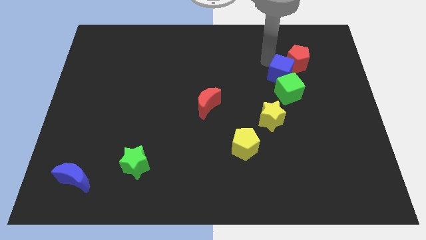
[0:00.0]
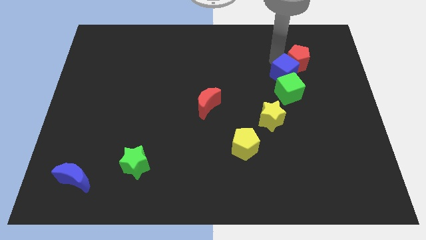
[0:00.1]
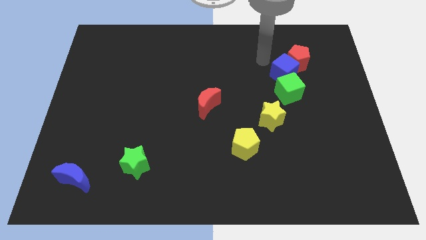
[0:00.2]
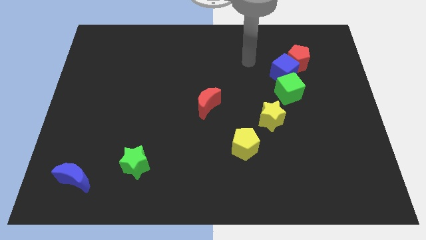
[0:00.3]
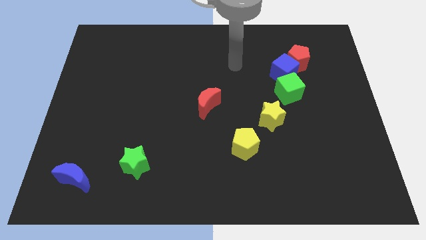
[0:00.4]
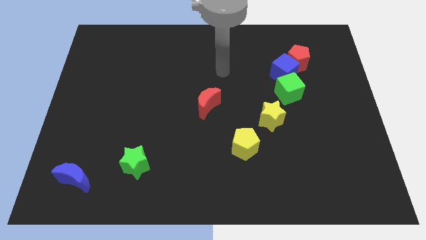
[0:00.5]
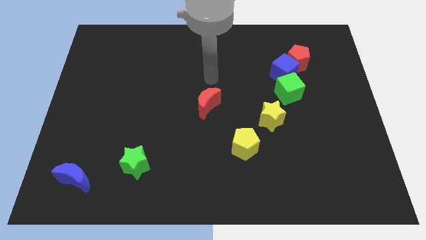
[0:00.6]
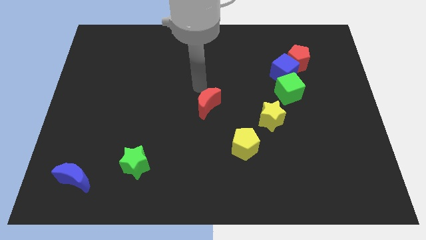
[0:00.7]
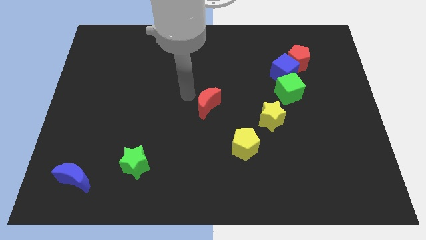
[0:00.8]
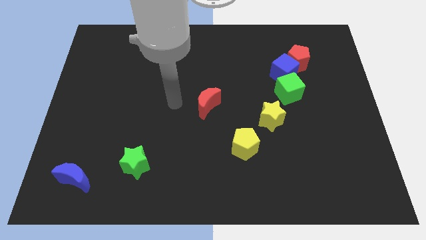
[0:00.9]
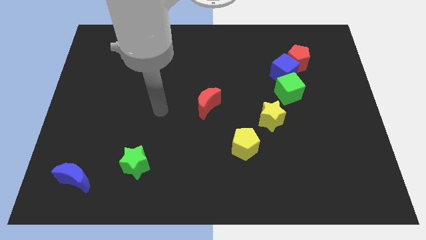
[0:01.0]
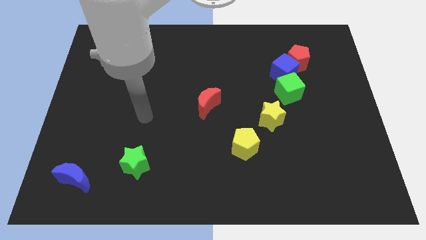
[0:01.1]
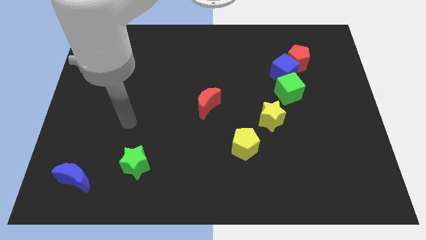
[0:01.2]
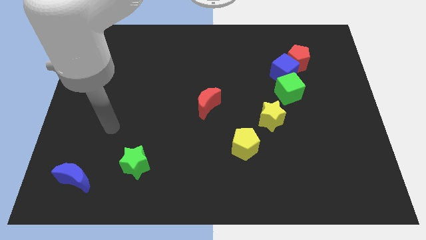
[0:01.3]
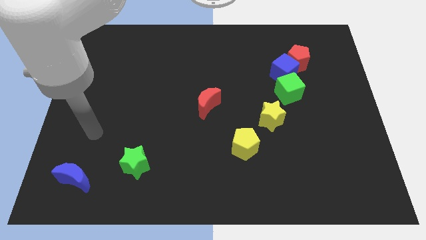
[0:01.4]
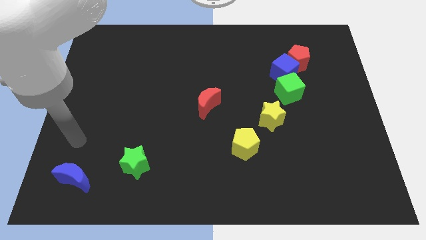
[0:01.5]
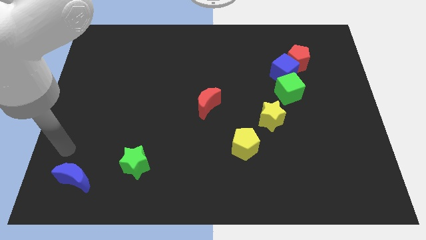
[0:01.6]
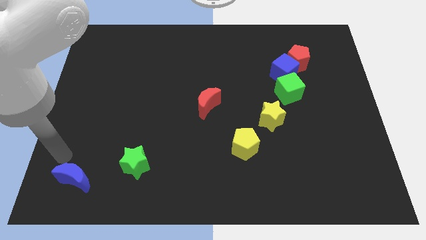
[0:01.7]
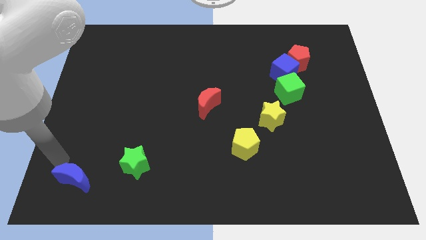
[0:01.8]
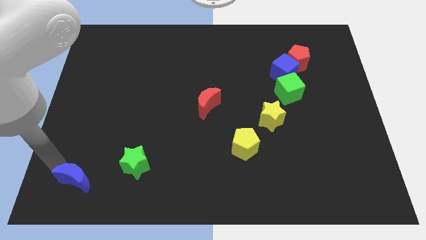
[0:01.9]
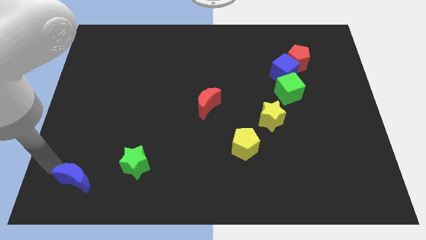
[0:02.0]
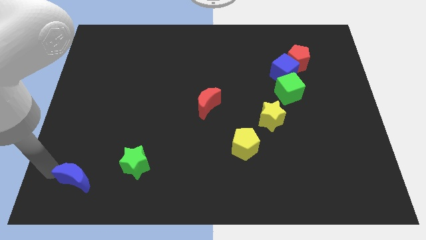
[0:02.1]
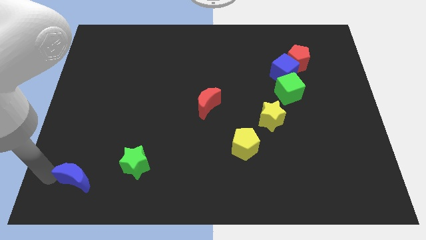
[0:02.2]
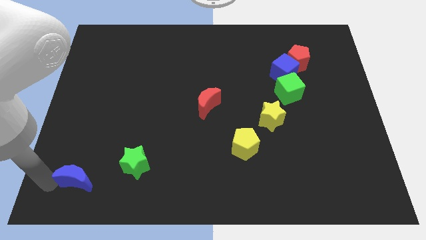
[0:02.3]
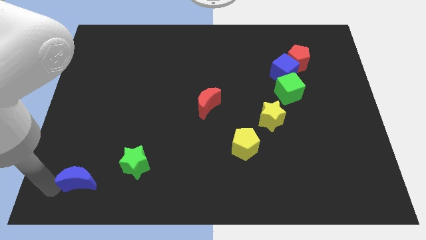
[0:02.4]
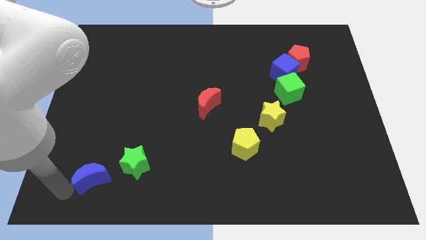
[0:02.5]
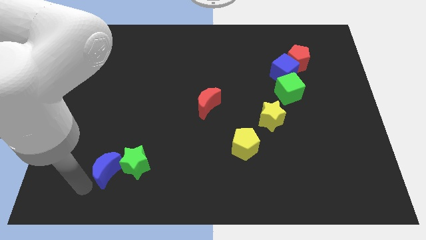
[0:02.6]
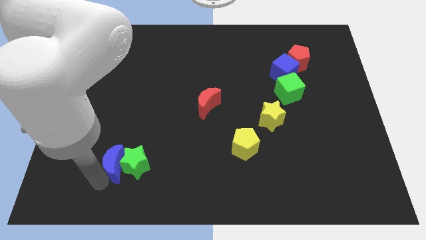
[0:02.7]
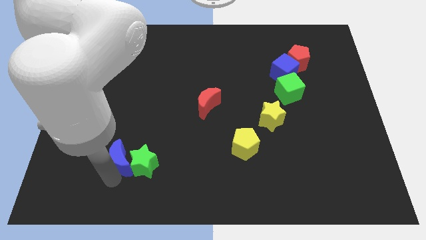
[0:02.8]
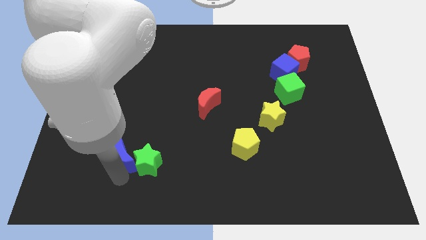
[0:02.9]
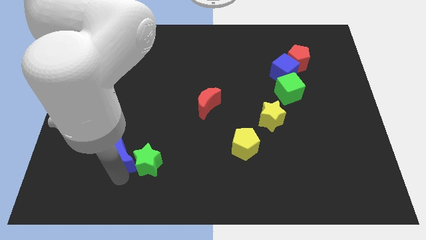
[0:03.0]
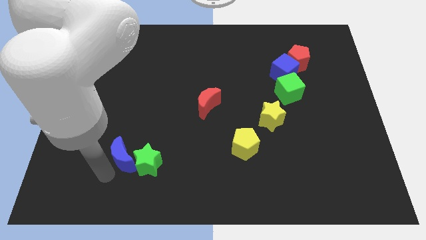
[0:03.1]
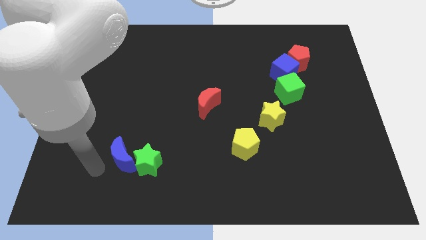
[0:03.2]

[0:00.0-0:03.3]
move blue moon into the left of the green star

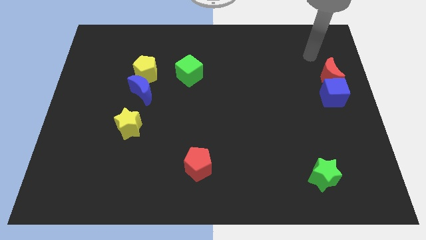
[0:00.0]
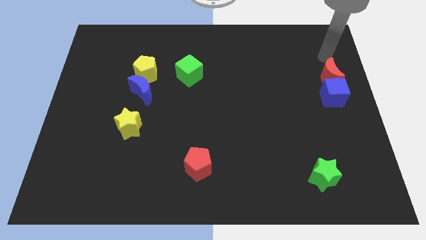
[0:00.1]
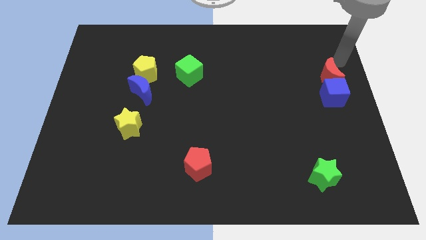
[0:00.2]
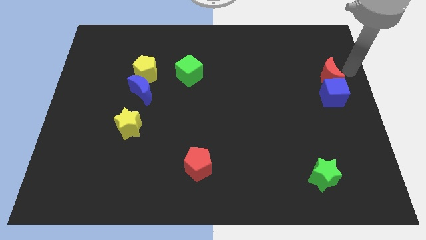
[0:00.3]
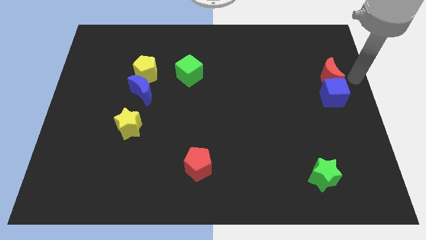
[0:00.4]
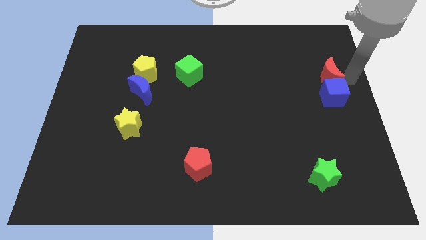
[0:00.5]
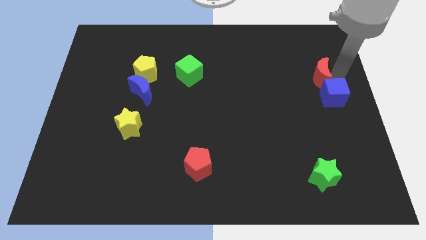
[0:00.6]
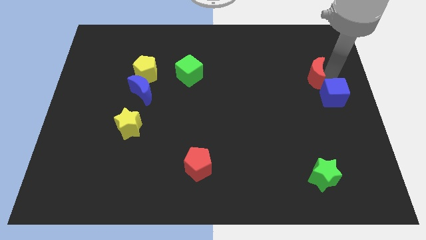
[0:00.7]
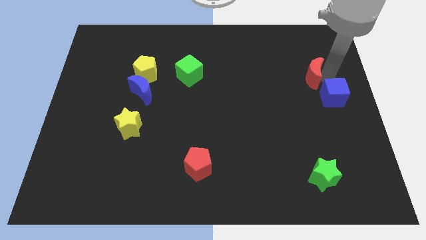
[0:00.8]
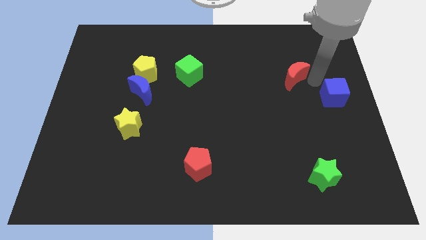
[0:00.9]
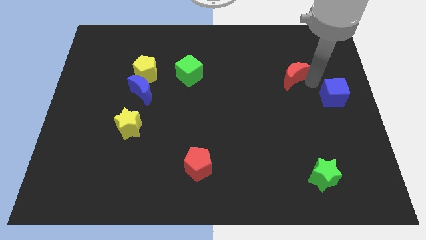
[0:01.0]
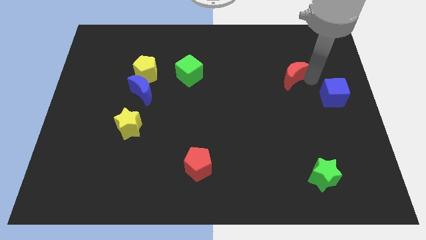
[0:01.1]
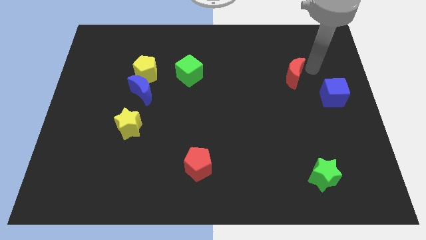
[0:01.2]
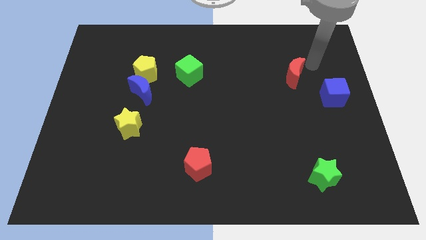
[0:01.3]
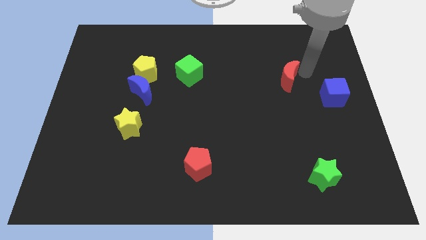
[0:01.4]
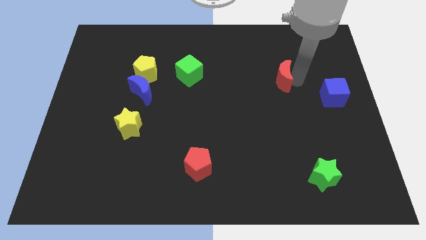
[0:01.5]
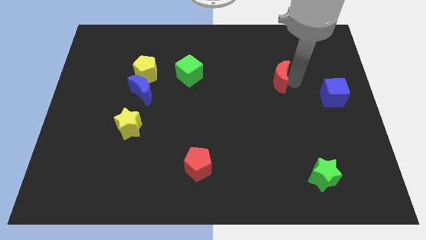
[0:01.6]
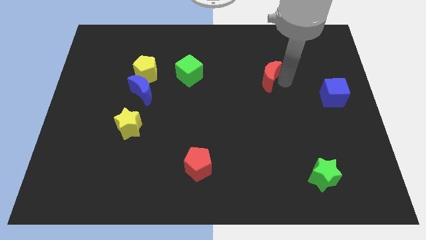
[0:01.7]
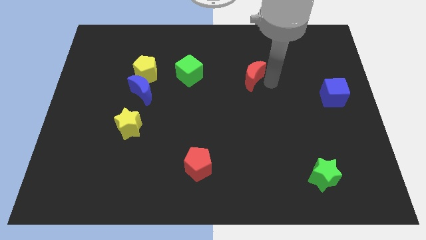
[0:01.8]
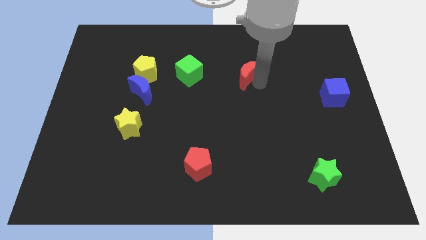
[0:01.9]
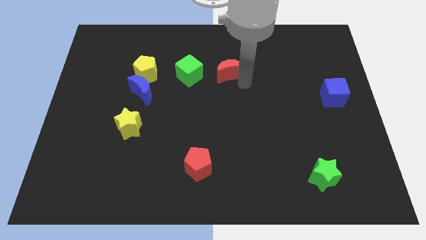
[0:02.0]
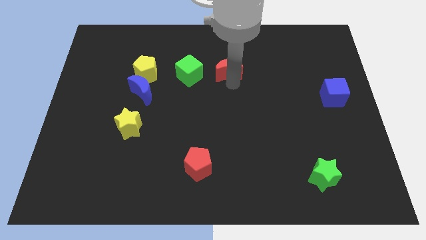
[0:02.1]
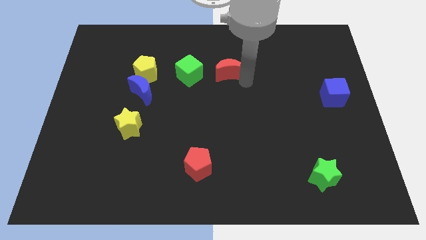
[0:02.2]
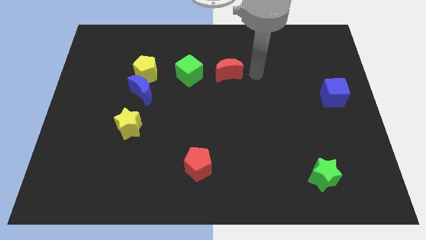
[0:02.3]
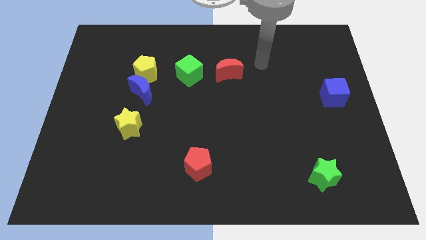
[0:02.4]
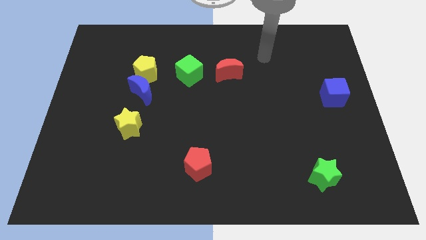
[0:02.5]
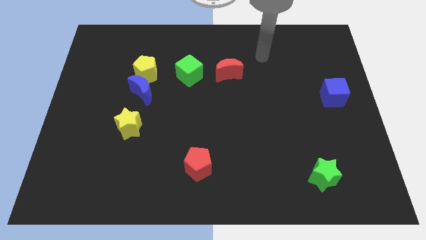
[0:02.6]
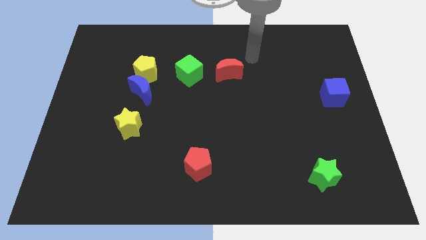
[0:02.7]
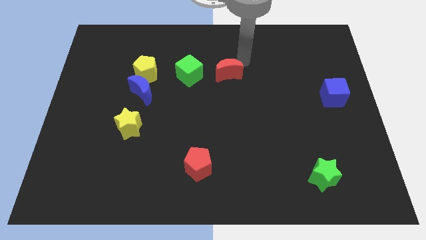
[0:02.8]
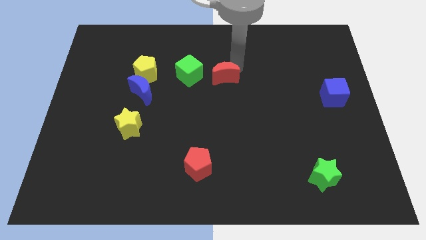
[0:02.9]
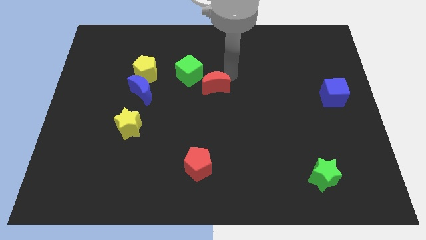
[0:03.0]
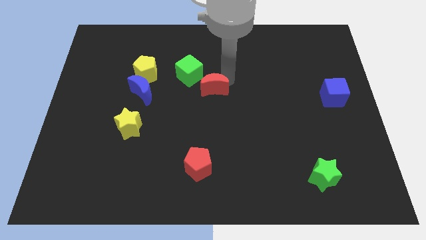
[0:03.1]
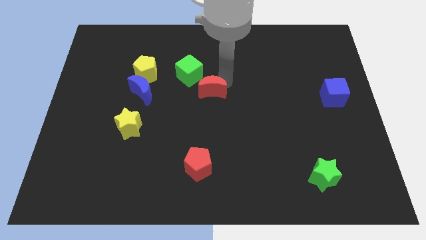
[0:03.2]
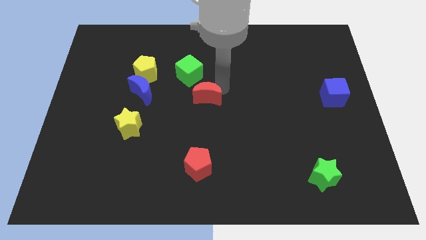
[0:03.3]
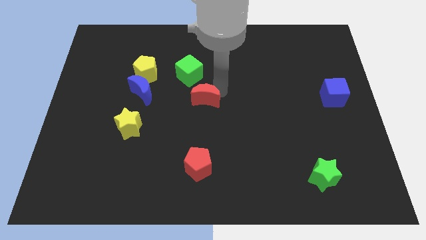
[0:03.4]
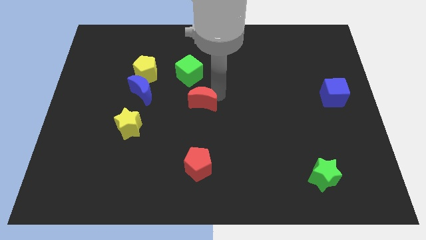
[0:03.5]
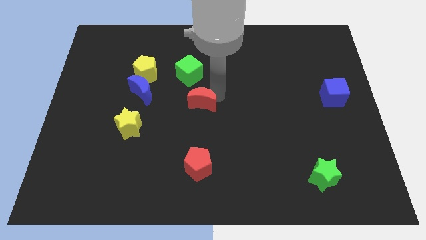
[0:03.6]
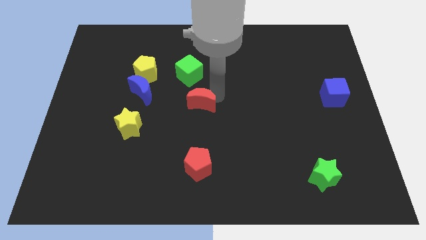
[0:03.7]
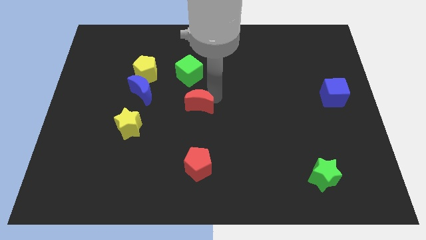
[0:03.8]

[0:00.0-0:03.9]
push the red crescent to the bottom of the green cube

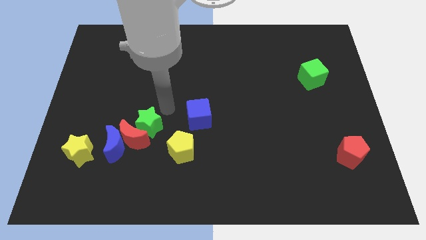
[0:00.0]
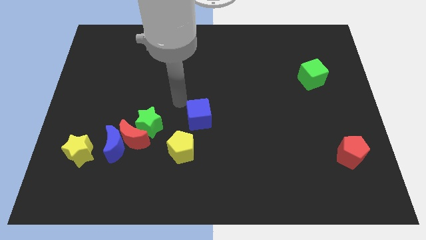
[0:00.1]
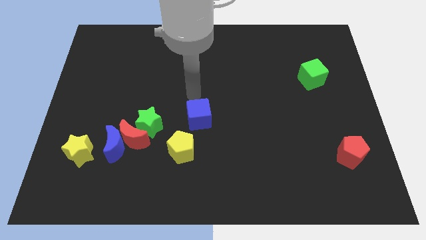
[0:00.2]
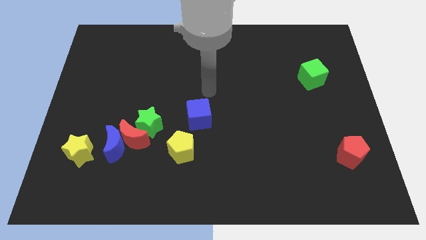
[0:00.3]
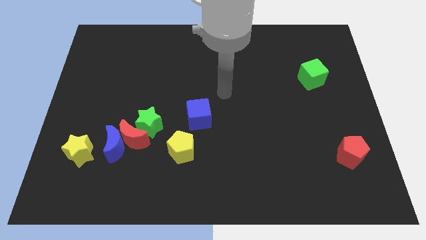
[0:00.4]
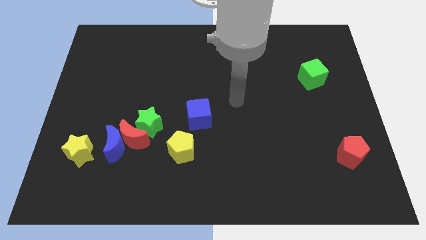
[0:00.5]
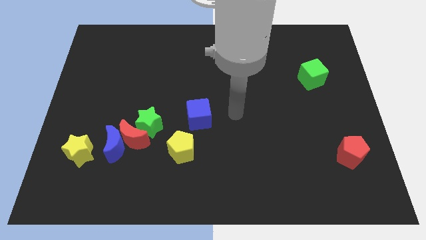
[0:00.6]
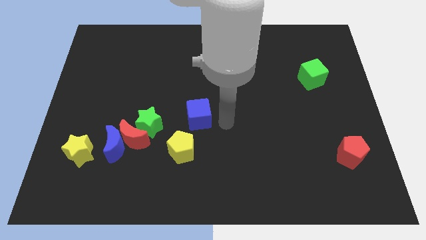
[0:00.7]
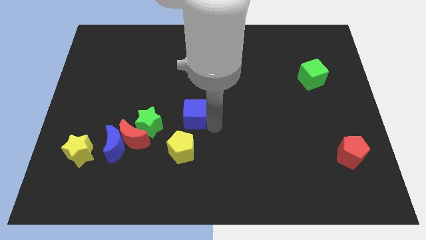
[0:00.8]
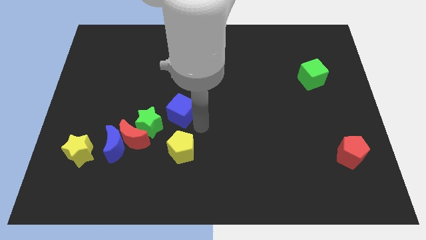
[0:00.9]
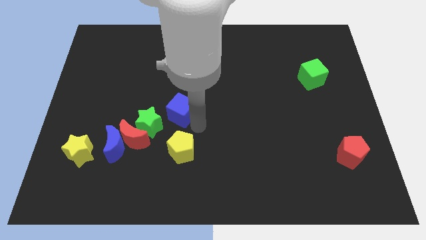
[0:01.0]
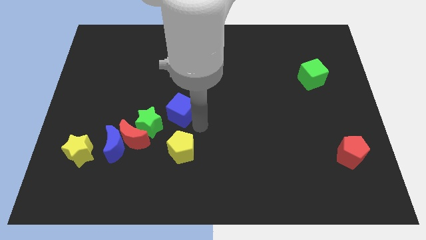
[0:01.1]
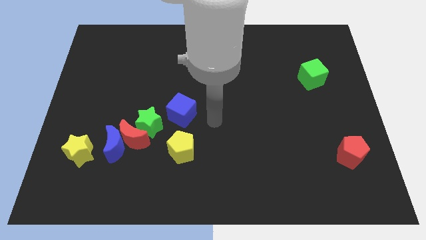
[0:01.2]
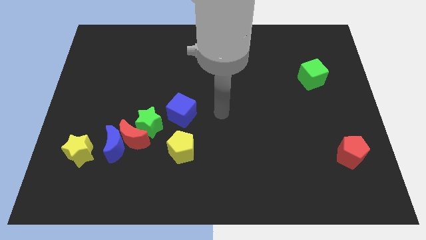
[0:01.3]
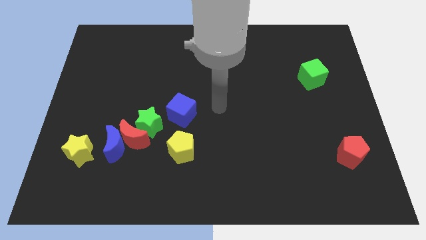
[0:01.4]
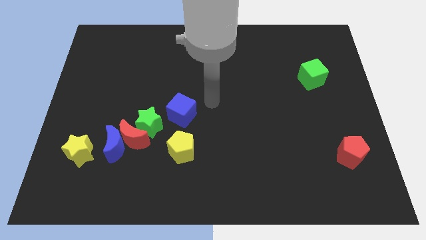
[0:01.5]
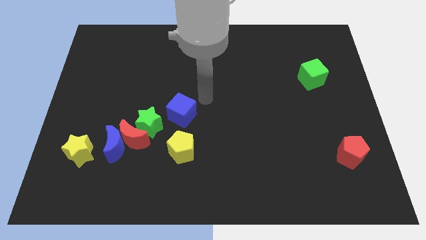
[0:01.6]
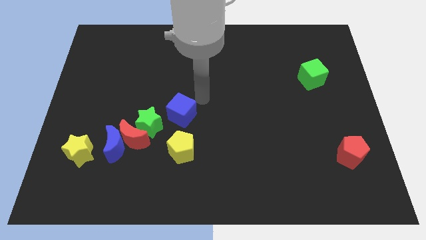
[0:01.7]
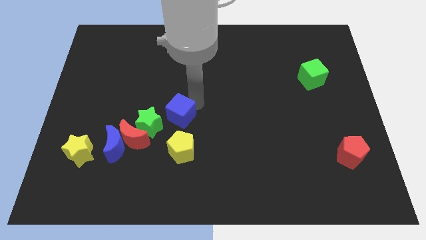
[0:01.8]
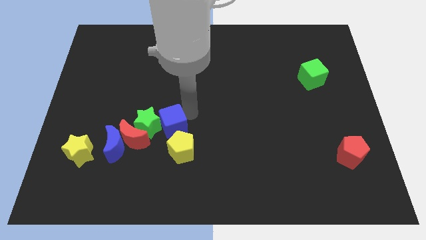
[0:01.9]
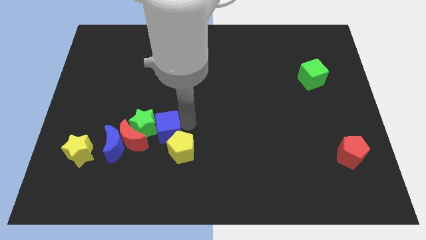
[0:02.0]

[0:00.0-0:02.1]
push blue cube to the right of green star
